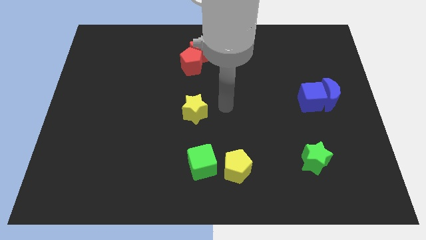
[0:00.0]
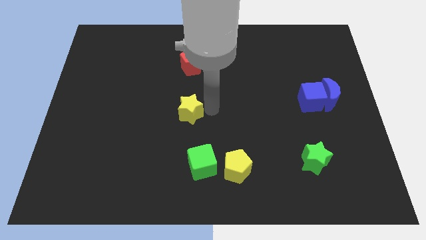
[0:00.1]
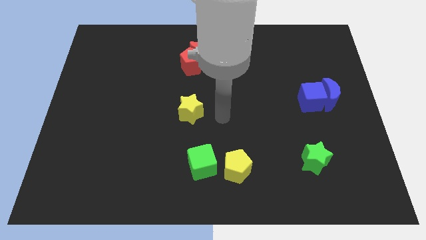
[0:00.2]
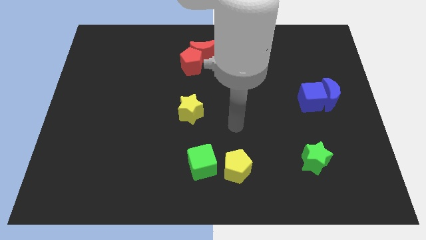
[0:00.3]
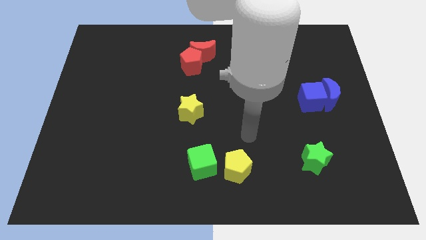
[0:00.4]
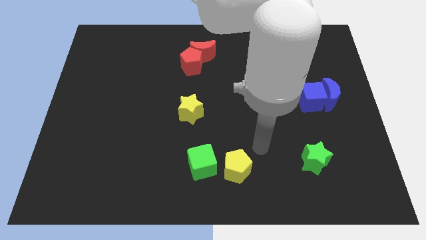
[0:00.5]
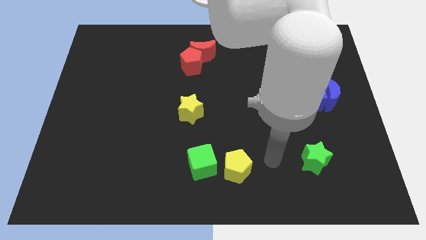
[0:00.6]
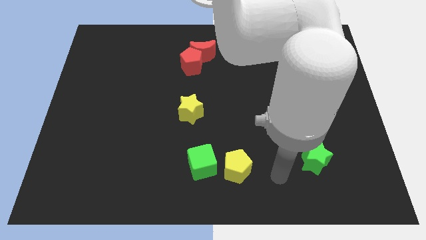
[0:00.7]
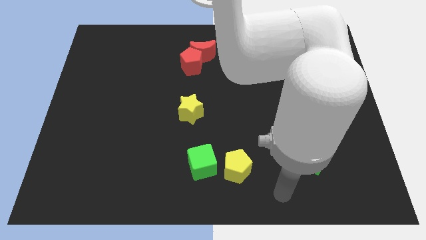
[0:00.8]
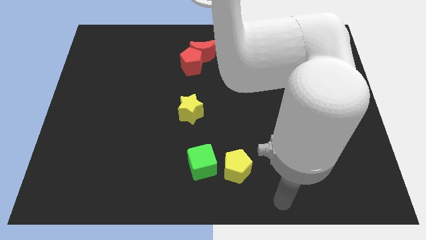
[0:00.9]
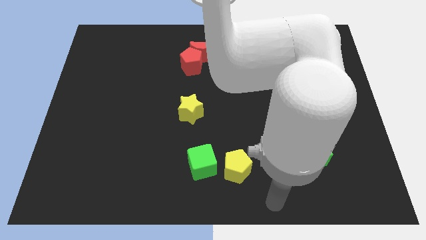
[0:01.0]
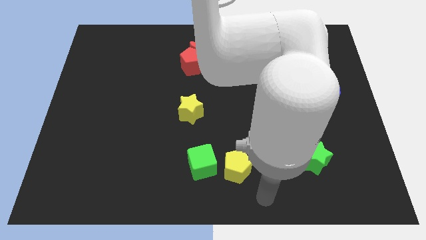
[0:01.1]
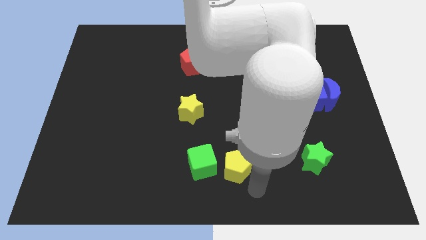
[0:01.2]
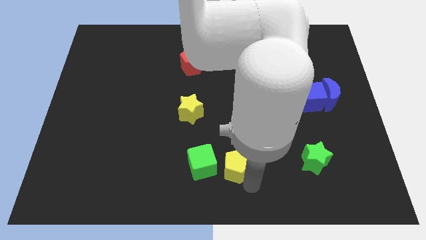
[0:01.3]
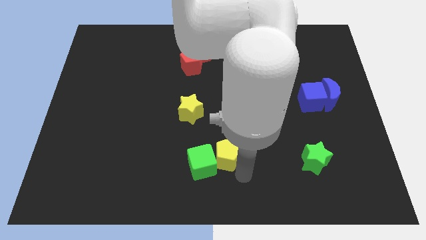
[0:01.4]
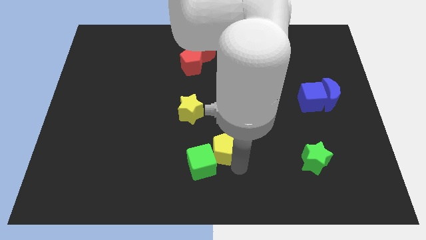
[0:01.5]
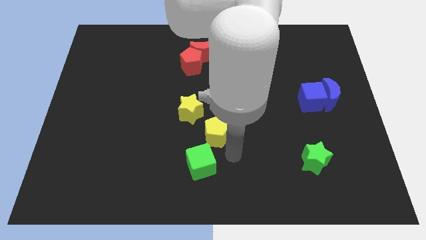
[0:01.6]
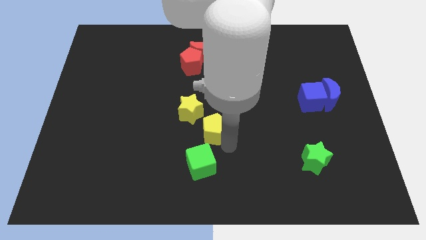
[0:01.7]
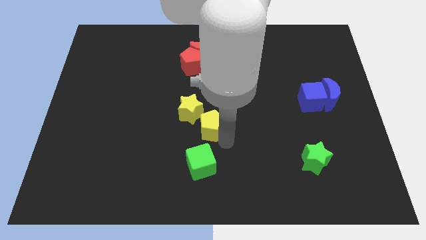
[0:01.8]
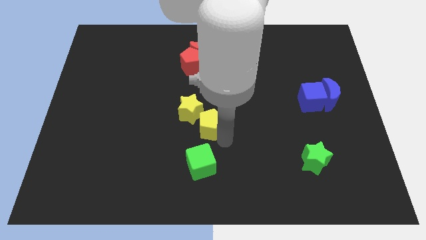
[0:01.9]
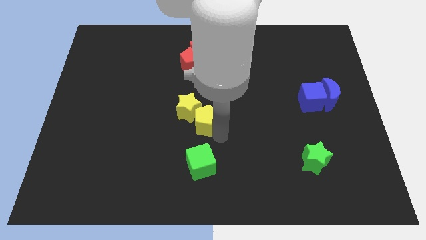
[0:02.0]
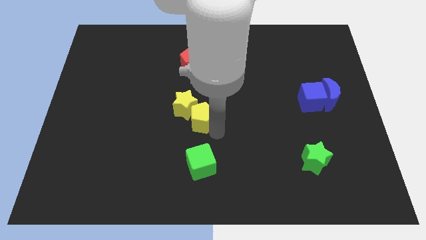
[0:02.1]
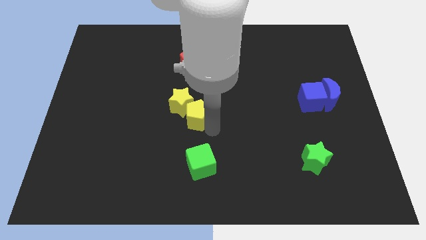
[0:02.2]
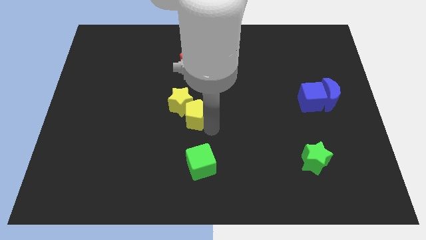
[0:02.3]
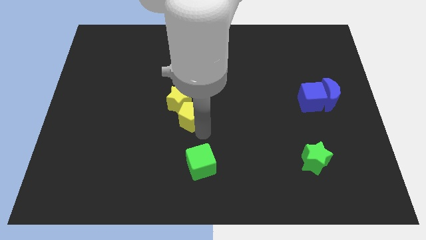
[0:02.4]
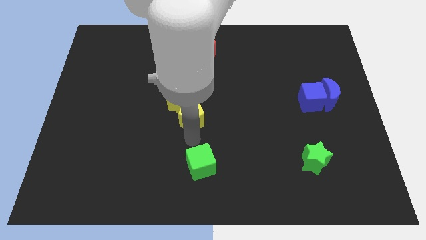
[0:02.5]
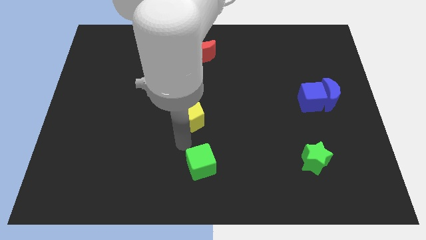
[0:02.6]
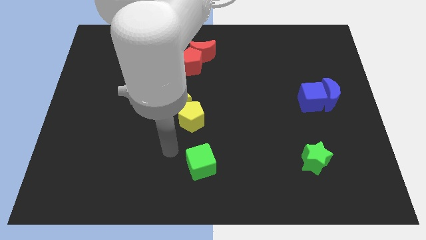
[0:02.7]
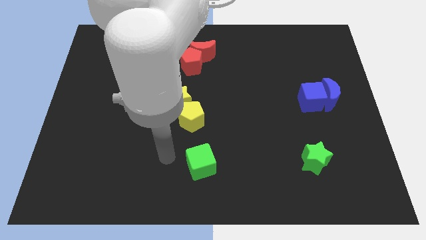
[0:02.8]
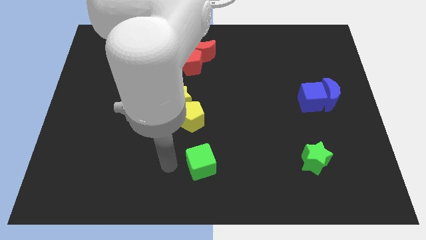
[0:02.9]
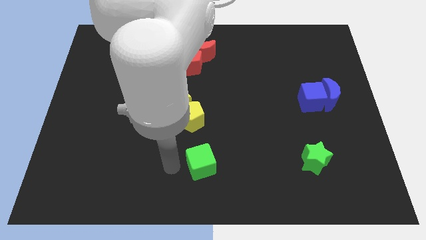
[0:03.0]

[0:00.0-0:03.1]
move the yellow pentagon into the yellow star

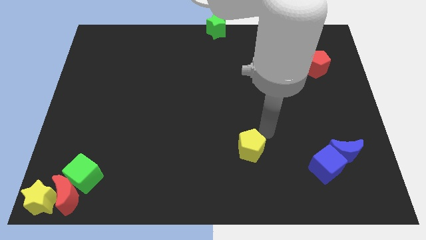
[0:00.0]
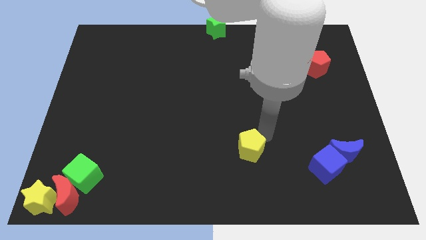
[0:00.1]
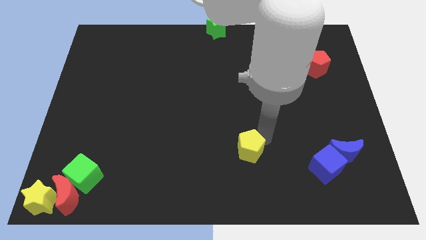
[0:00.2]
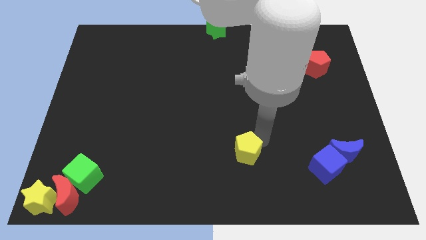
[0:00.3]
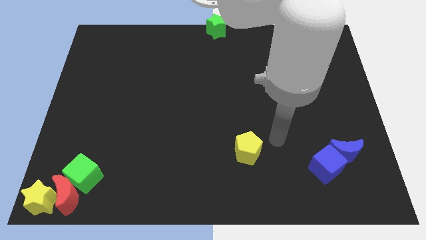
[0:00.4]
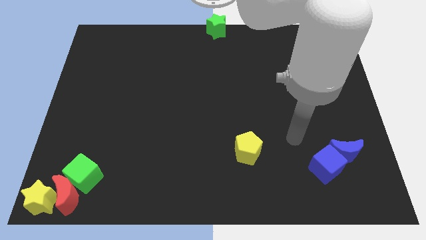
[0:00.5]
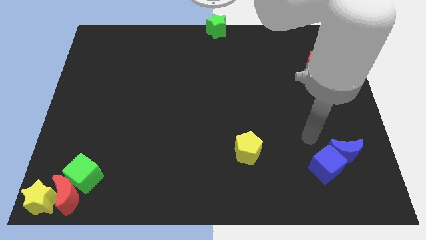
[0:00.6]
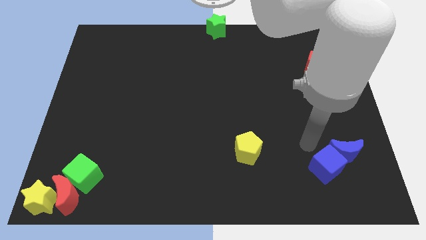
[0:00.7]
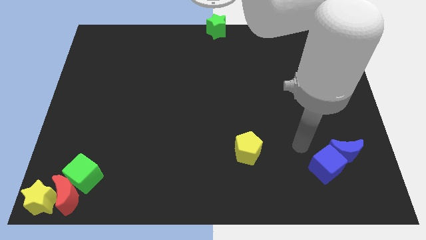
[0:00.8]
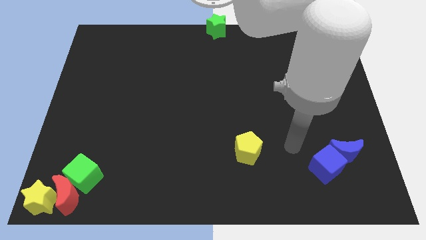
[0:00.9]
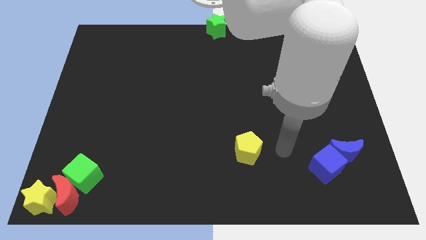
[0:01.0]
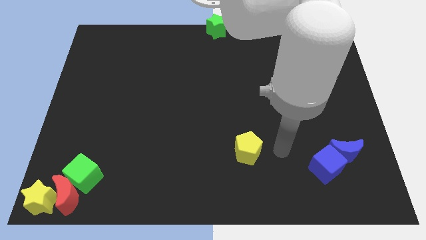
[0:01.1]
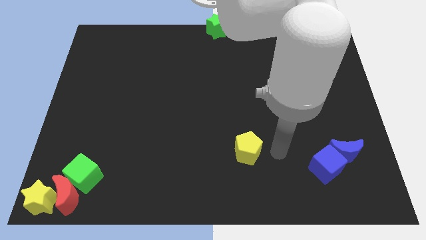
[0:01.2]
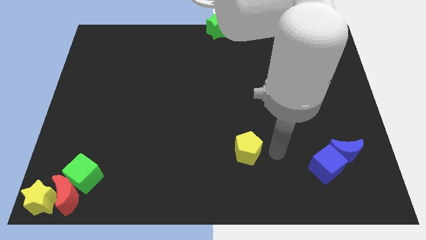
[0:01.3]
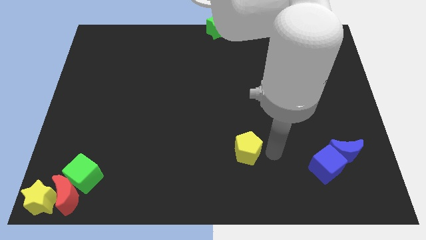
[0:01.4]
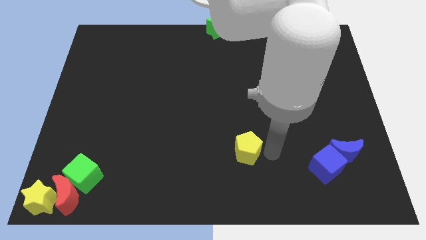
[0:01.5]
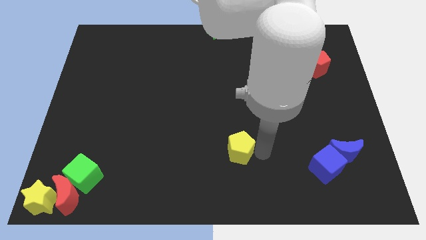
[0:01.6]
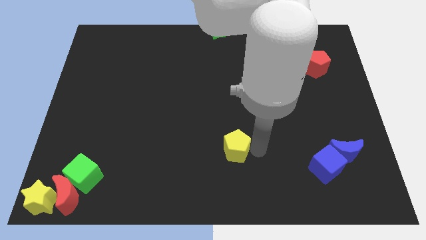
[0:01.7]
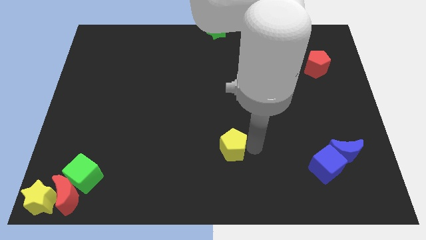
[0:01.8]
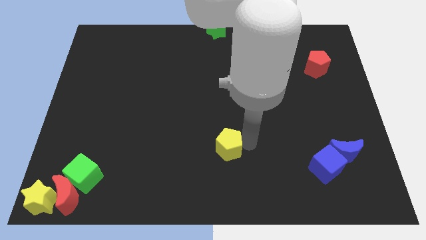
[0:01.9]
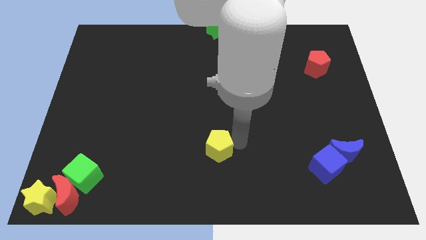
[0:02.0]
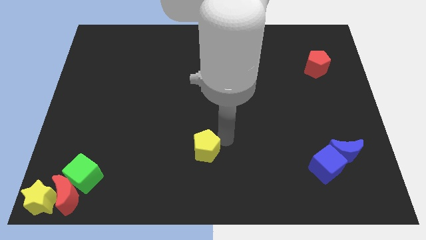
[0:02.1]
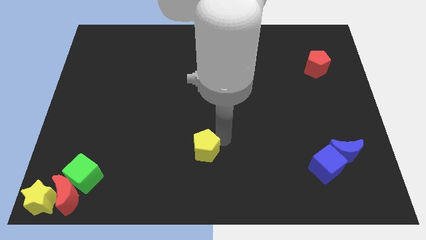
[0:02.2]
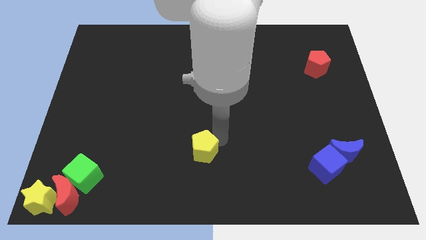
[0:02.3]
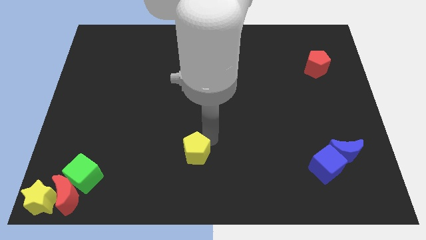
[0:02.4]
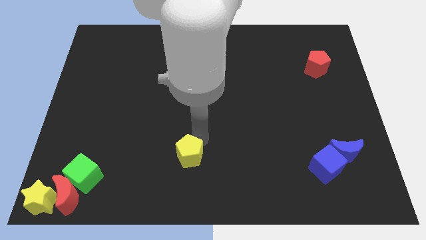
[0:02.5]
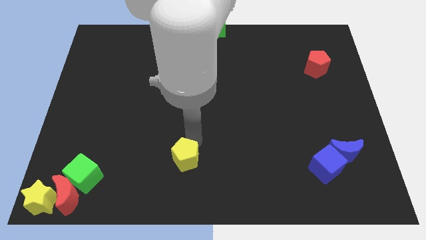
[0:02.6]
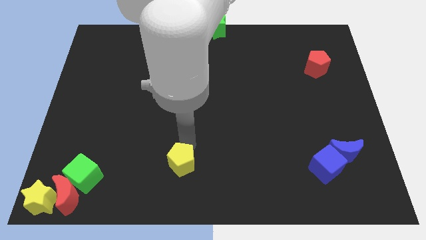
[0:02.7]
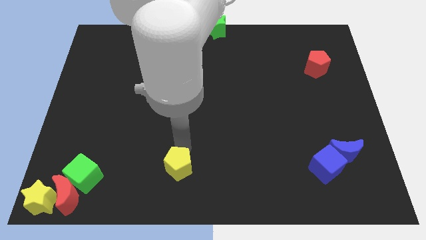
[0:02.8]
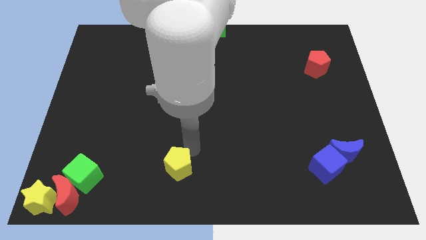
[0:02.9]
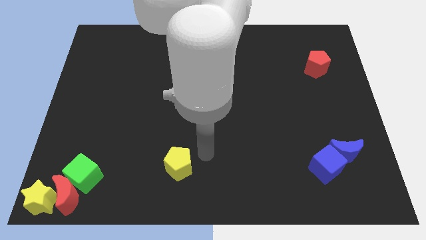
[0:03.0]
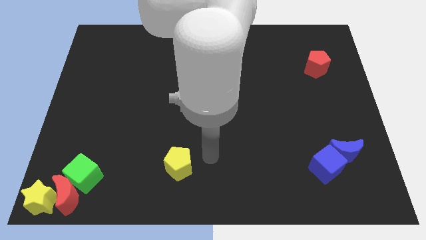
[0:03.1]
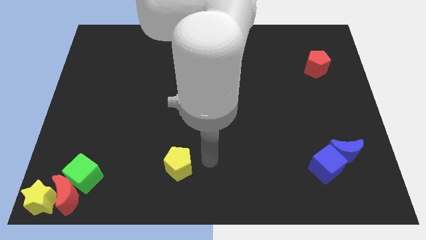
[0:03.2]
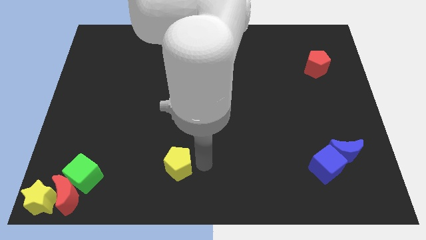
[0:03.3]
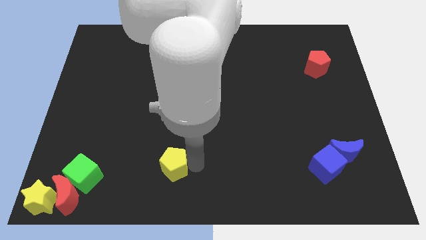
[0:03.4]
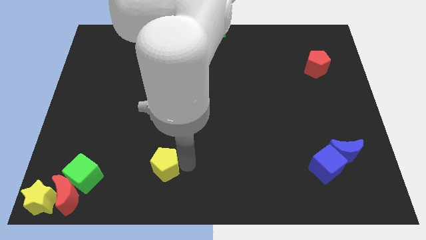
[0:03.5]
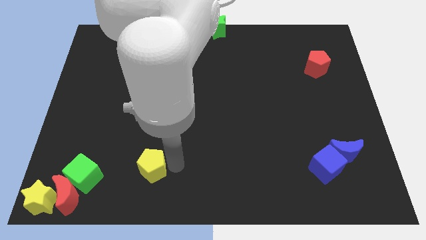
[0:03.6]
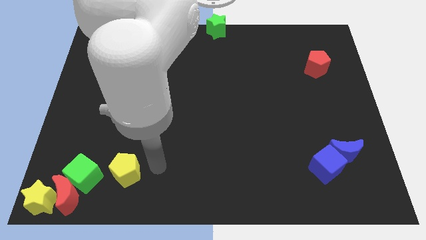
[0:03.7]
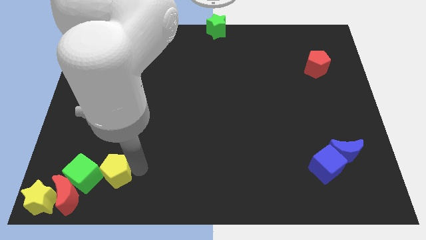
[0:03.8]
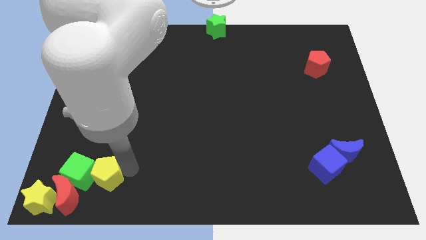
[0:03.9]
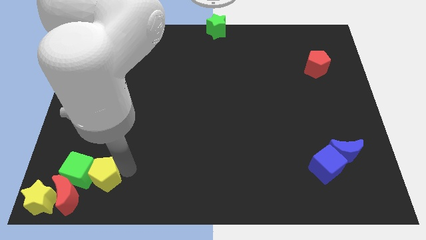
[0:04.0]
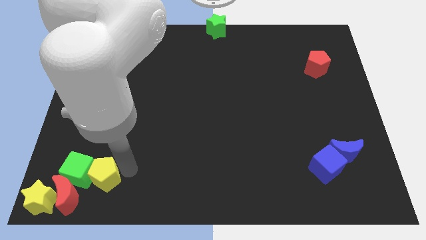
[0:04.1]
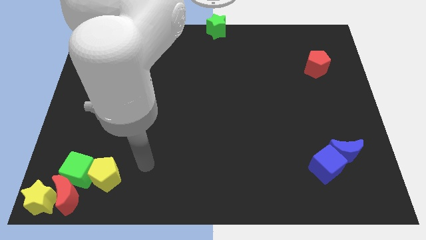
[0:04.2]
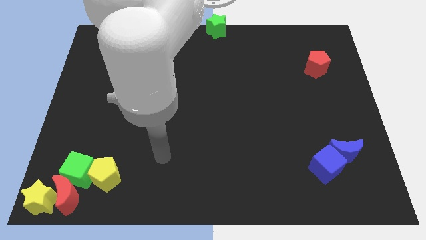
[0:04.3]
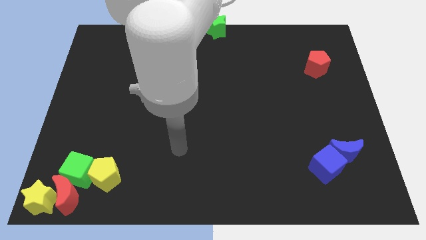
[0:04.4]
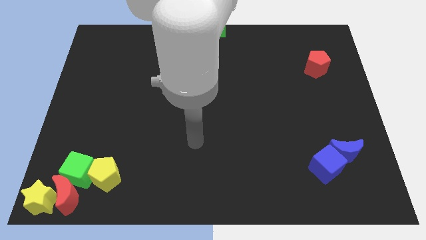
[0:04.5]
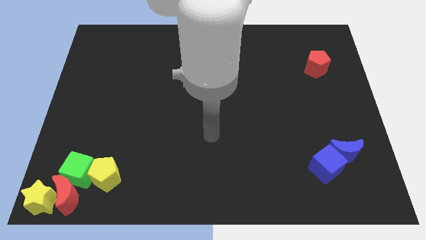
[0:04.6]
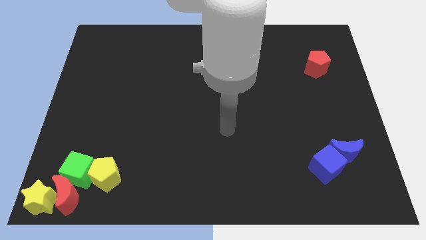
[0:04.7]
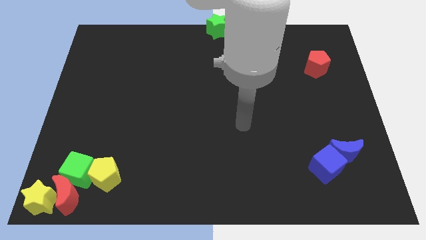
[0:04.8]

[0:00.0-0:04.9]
push the yellow pentagon into the green cube

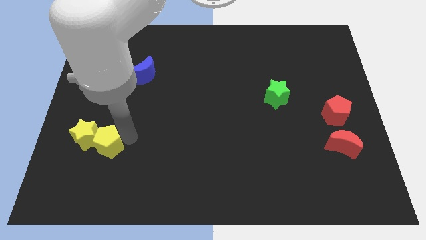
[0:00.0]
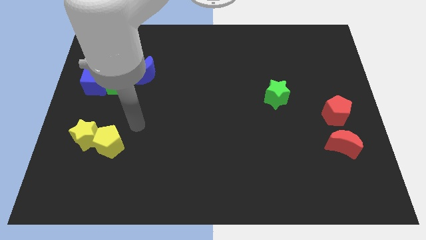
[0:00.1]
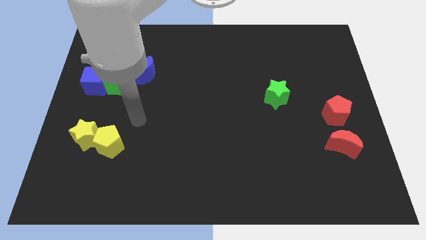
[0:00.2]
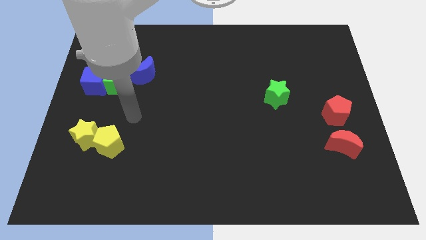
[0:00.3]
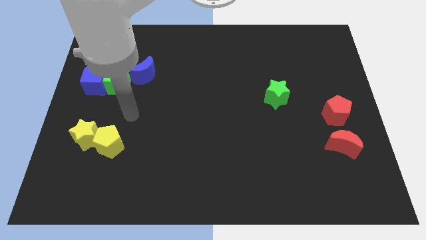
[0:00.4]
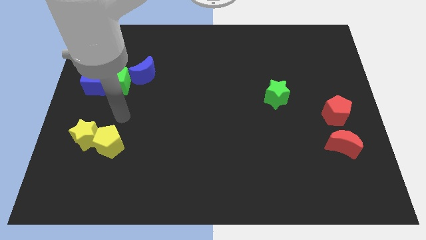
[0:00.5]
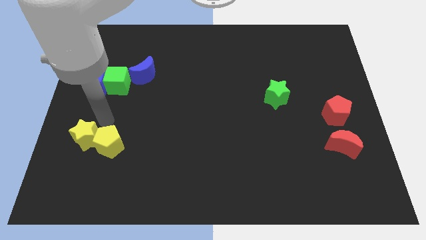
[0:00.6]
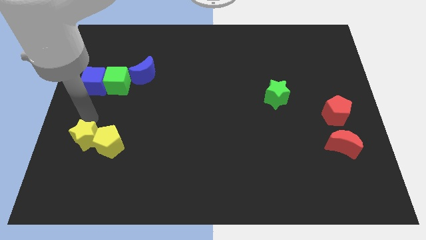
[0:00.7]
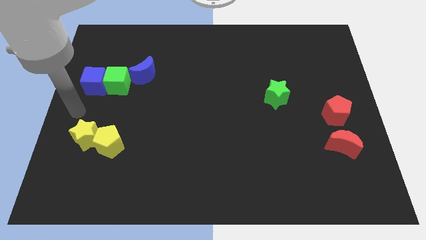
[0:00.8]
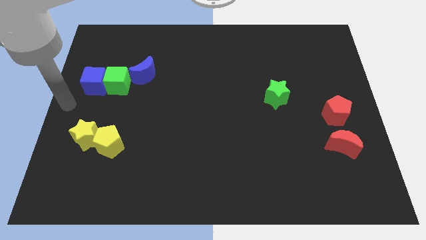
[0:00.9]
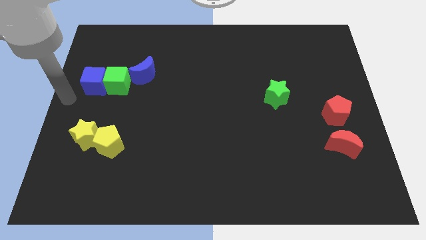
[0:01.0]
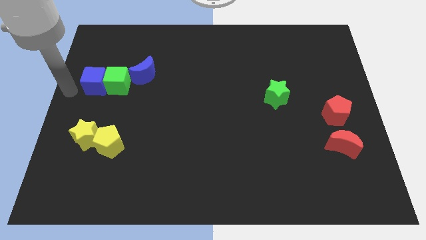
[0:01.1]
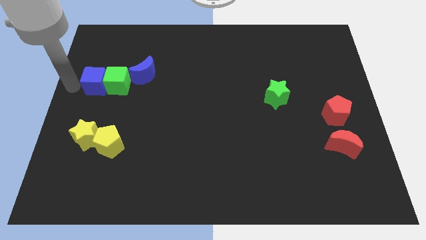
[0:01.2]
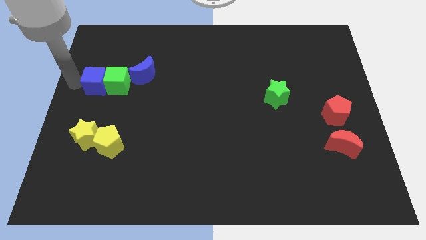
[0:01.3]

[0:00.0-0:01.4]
point your arm to the left of blue cube
